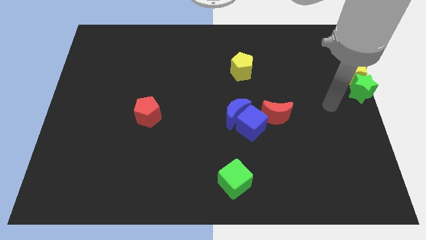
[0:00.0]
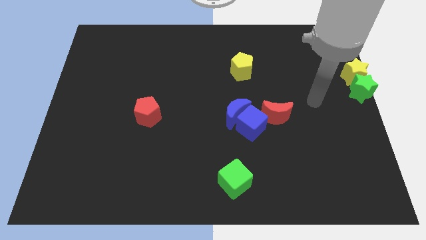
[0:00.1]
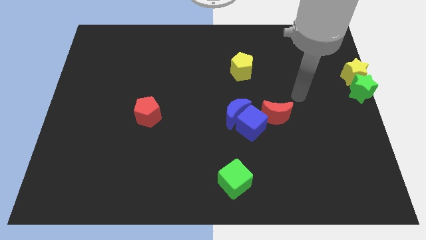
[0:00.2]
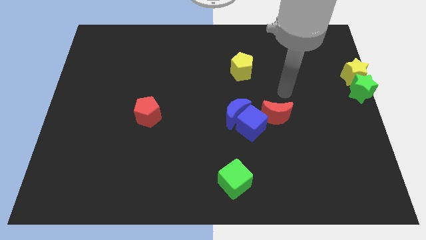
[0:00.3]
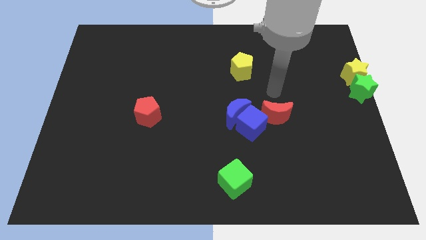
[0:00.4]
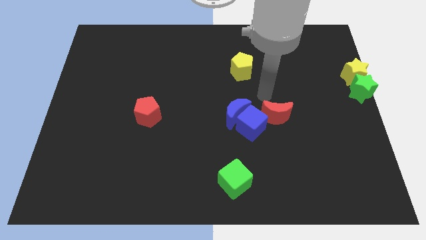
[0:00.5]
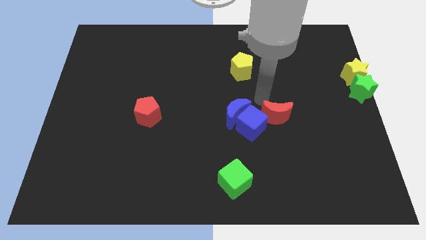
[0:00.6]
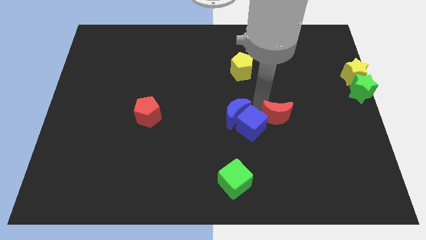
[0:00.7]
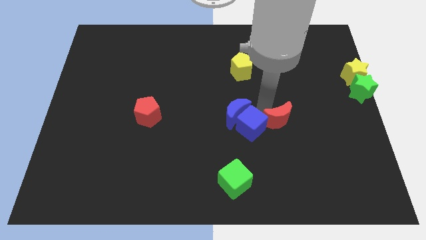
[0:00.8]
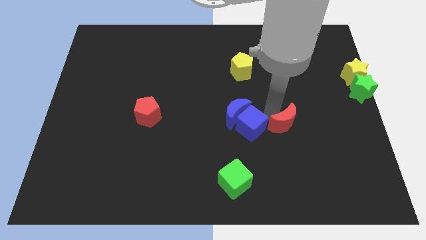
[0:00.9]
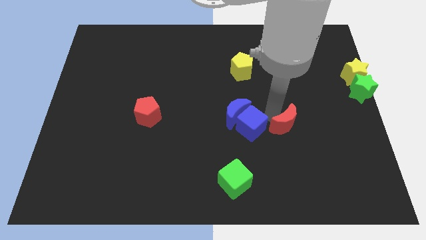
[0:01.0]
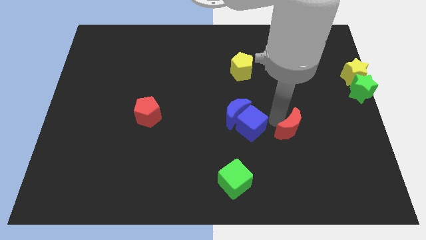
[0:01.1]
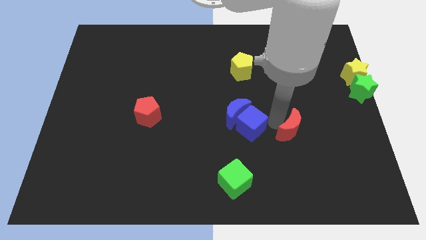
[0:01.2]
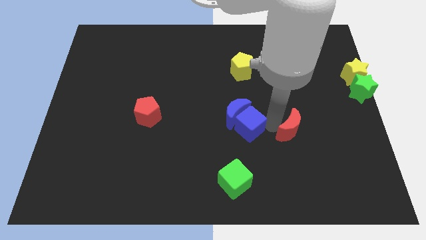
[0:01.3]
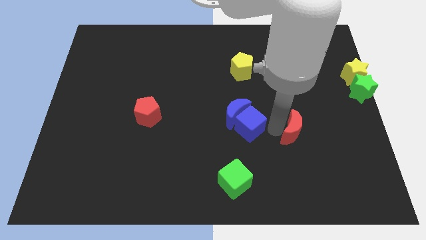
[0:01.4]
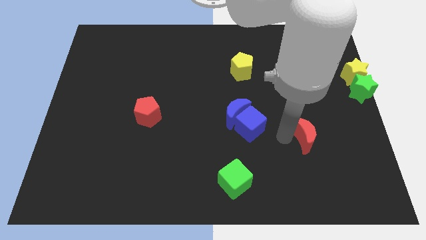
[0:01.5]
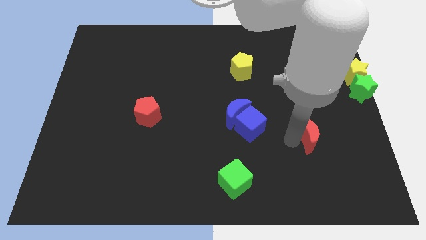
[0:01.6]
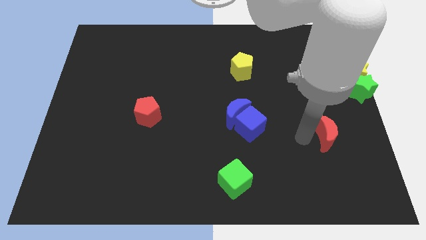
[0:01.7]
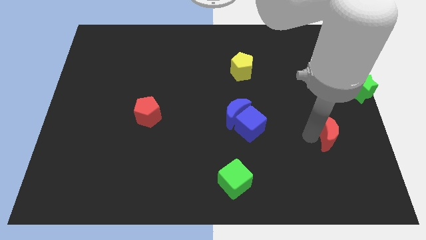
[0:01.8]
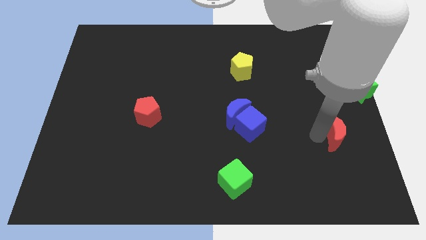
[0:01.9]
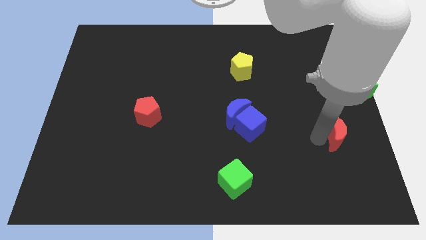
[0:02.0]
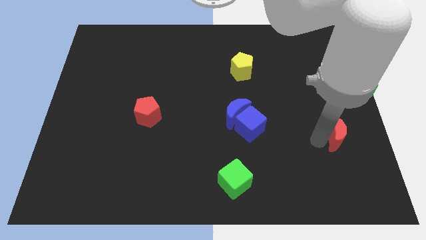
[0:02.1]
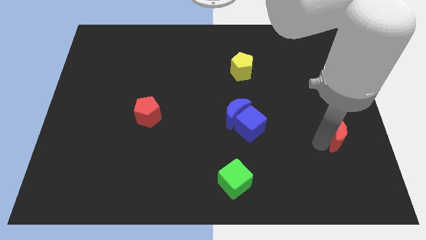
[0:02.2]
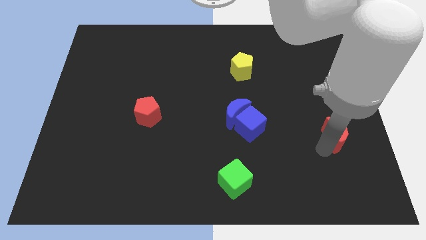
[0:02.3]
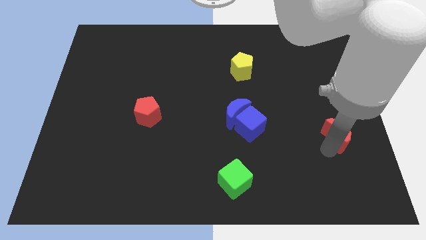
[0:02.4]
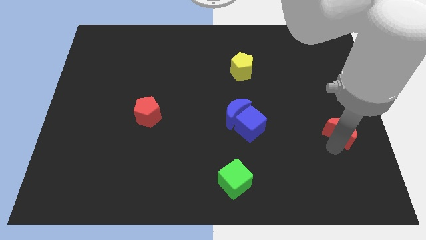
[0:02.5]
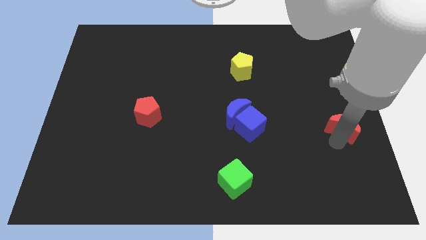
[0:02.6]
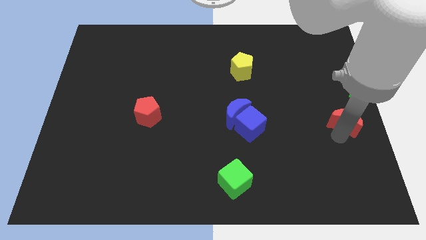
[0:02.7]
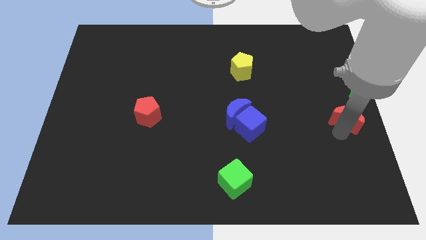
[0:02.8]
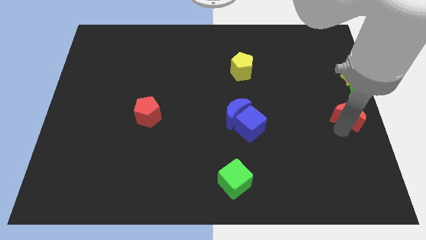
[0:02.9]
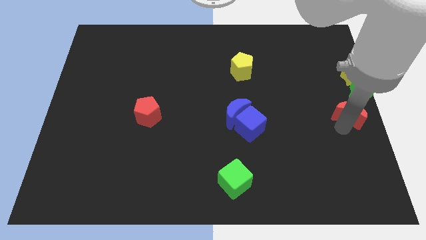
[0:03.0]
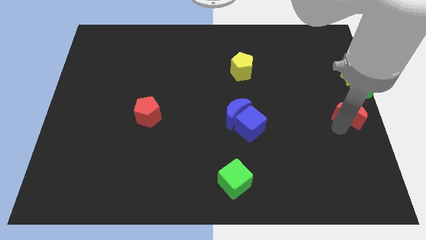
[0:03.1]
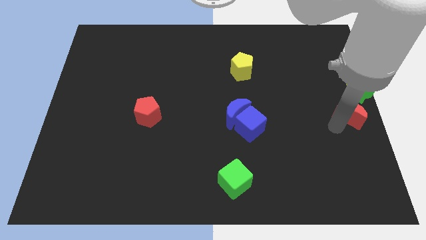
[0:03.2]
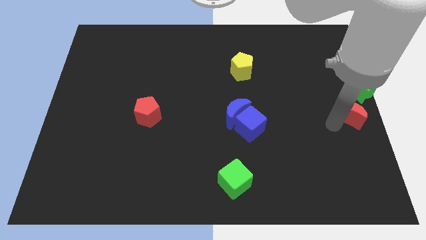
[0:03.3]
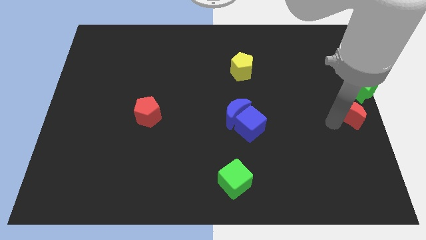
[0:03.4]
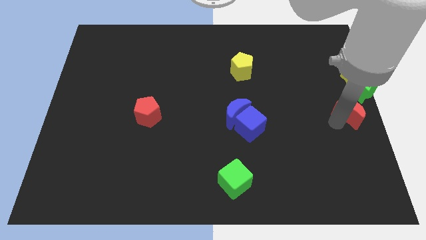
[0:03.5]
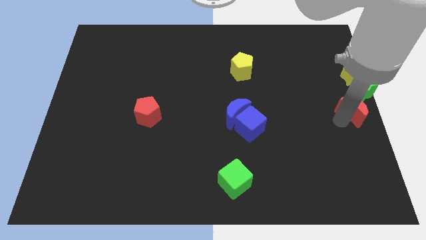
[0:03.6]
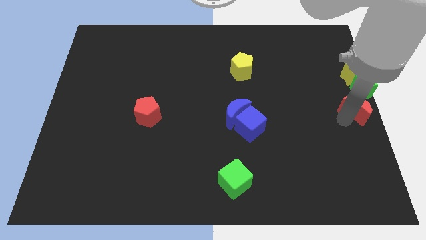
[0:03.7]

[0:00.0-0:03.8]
push red crescent apart from blue cube

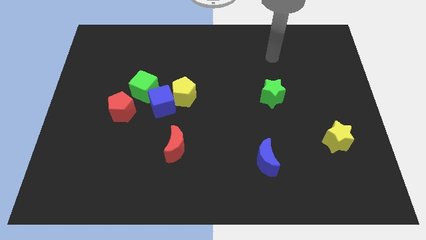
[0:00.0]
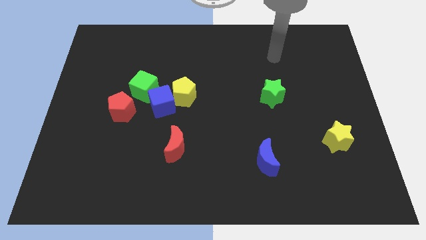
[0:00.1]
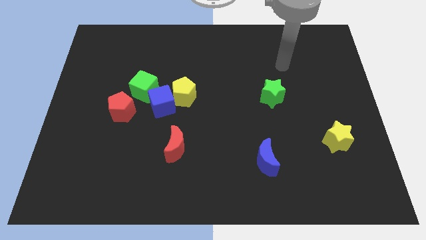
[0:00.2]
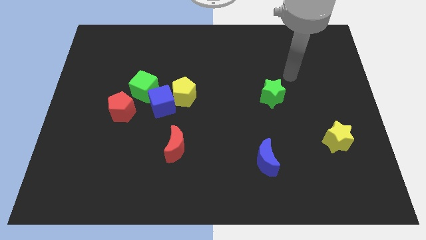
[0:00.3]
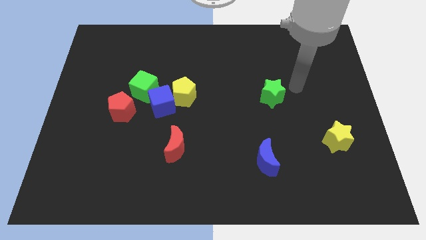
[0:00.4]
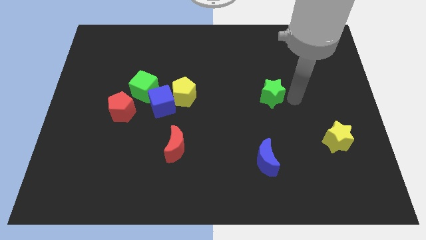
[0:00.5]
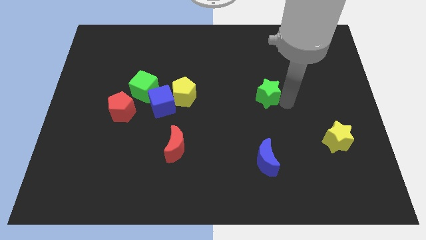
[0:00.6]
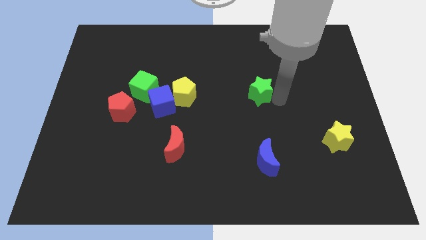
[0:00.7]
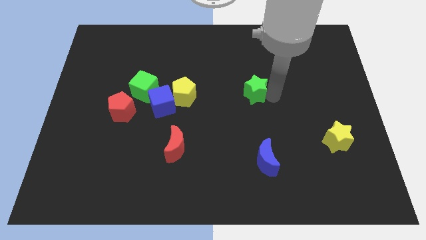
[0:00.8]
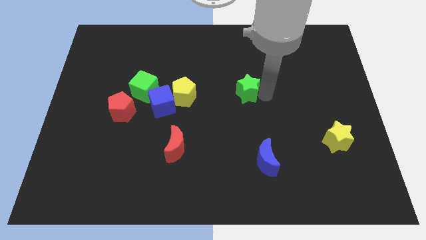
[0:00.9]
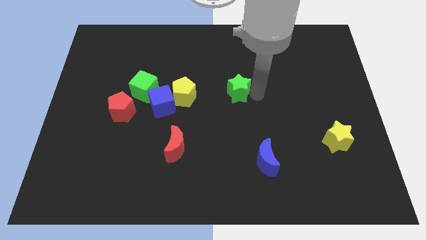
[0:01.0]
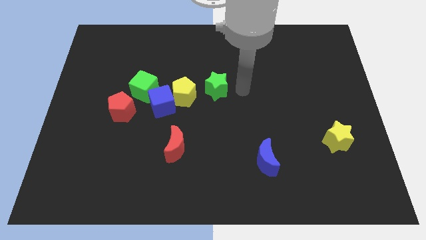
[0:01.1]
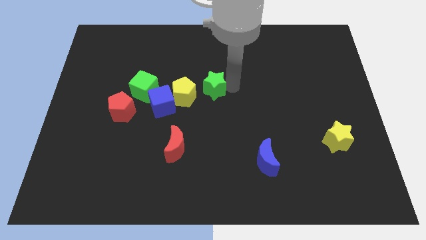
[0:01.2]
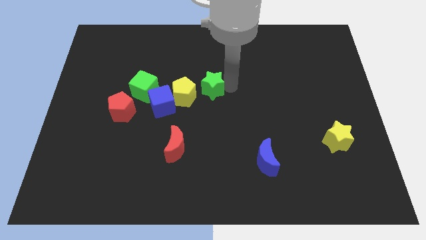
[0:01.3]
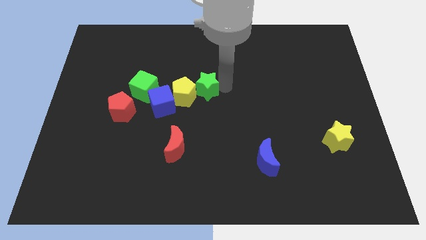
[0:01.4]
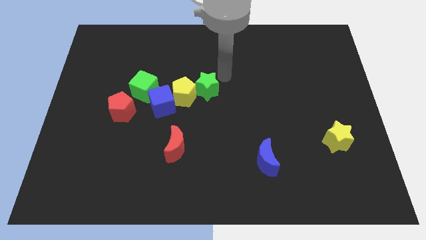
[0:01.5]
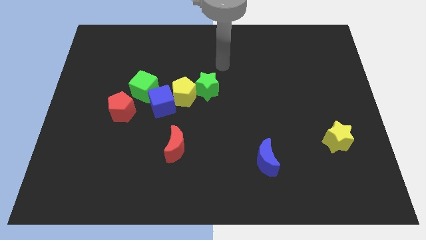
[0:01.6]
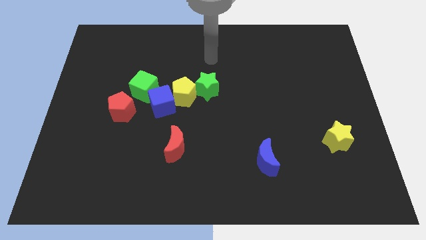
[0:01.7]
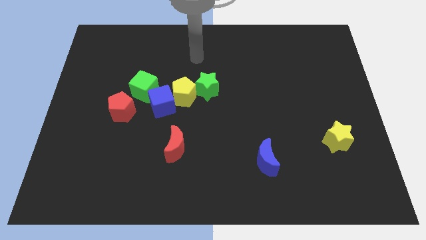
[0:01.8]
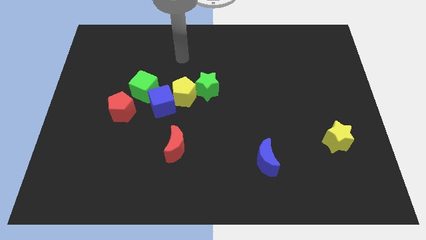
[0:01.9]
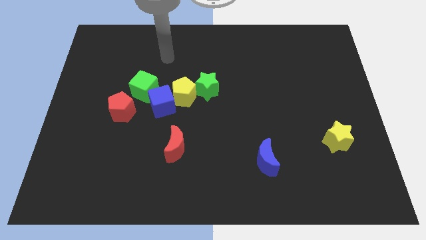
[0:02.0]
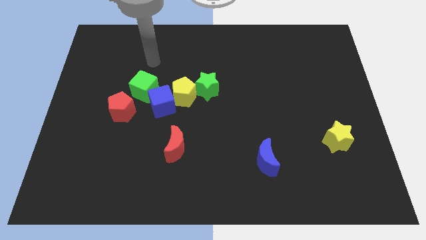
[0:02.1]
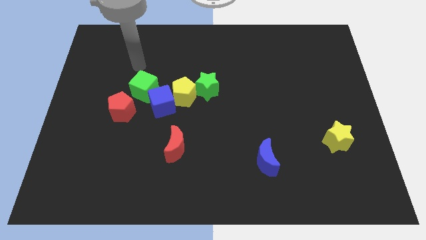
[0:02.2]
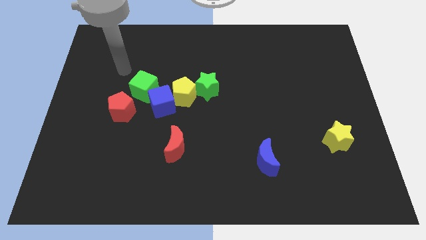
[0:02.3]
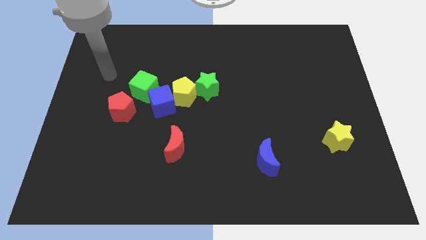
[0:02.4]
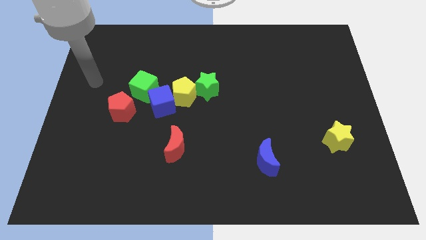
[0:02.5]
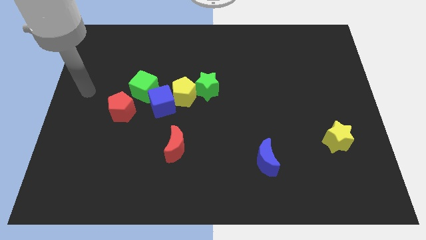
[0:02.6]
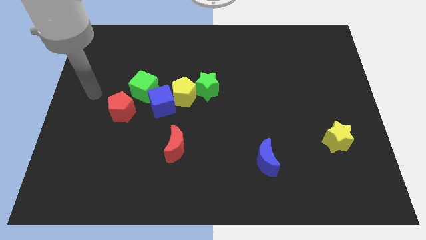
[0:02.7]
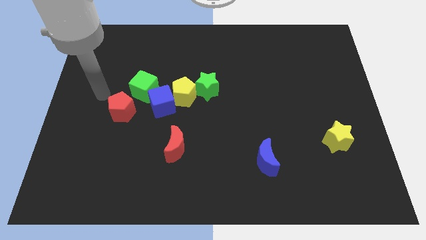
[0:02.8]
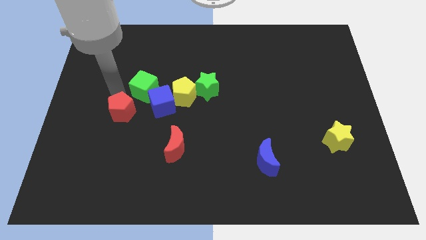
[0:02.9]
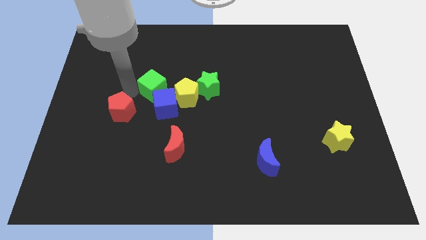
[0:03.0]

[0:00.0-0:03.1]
place green star close to yellow pentagon

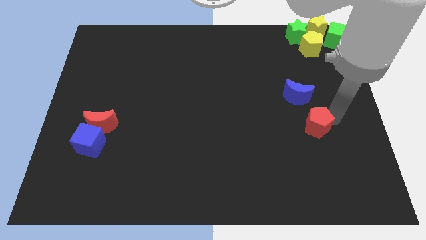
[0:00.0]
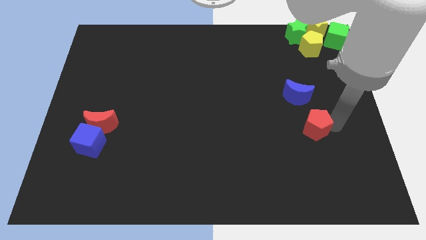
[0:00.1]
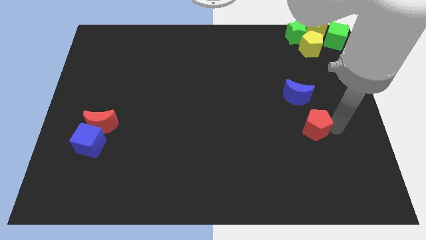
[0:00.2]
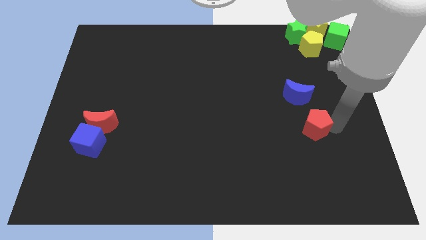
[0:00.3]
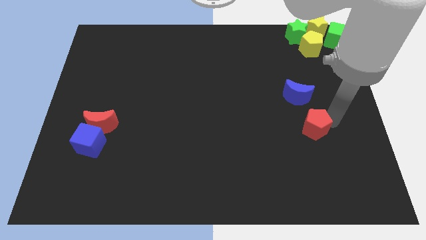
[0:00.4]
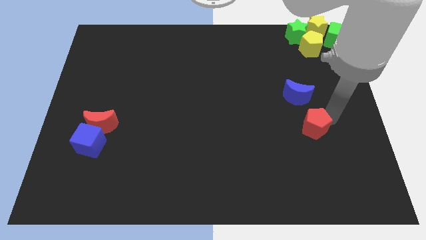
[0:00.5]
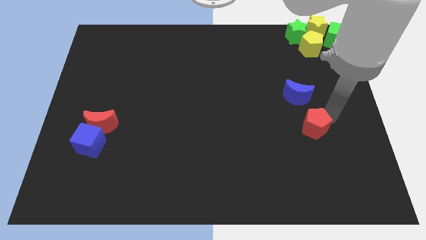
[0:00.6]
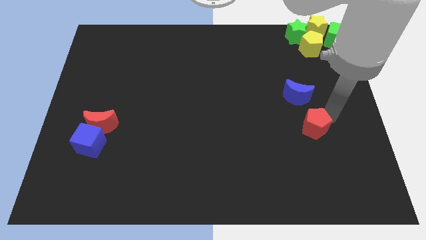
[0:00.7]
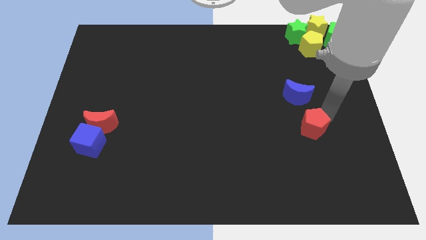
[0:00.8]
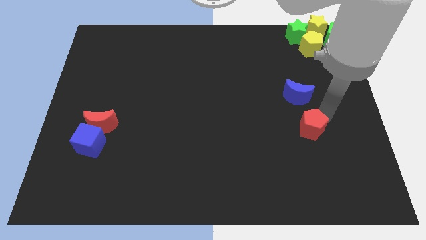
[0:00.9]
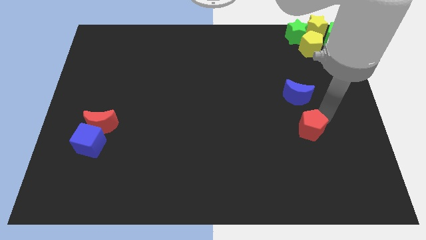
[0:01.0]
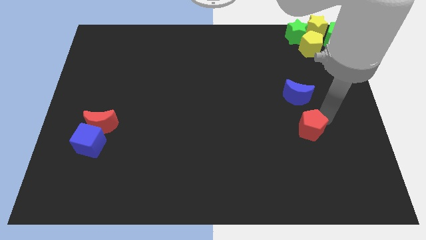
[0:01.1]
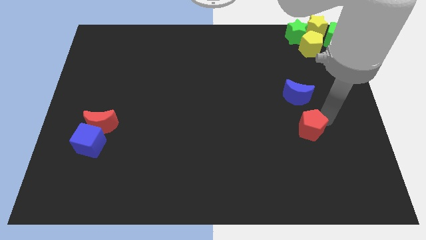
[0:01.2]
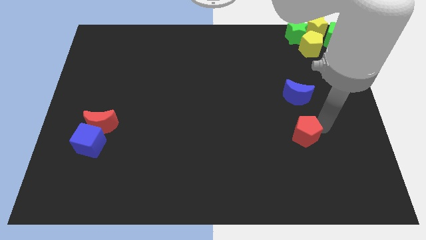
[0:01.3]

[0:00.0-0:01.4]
place the red pentagon below te blue moon

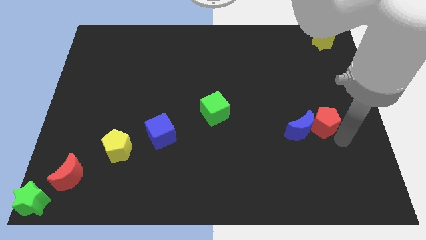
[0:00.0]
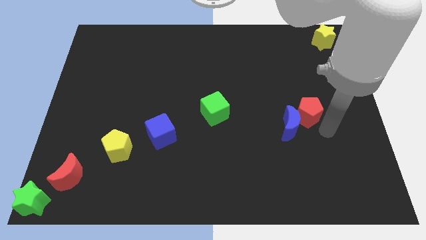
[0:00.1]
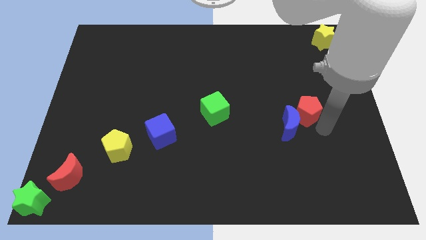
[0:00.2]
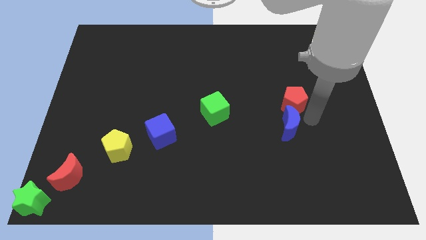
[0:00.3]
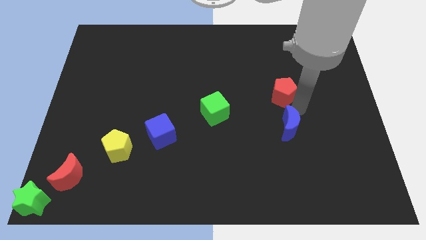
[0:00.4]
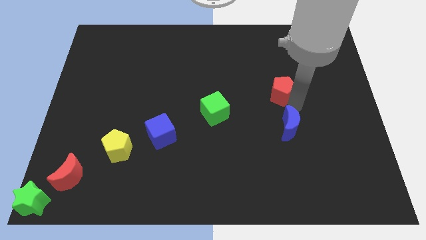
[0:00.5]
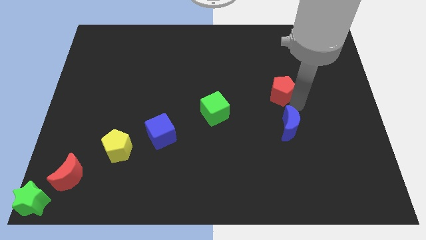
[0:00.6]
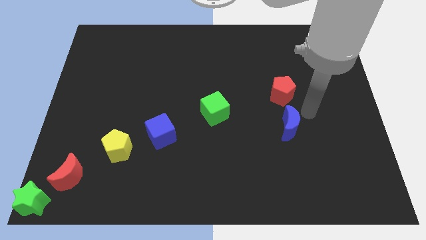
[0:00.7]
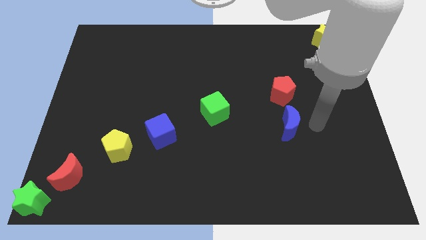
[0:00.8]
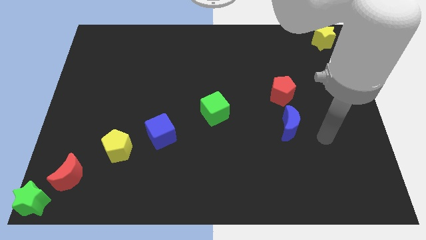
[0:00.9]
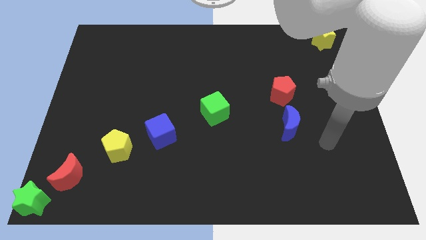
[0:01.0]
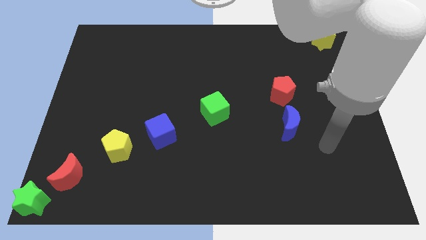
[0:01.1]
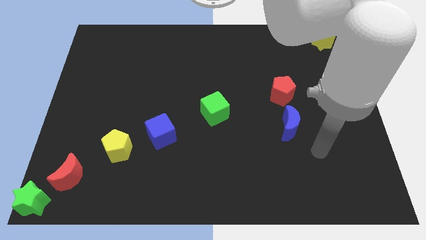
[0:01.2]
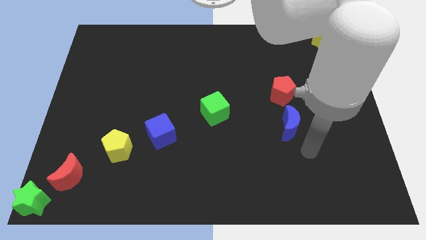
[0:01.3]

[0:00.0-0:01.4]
slide the red pentagon vertically above the blue moon
